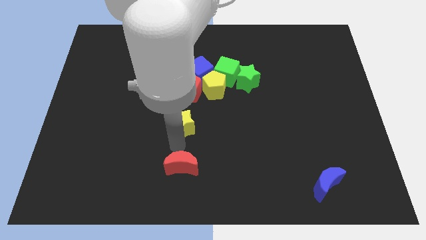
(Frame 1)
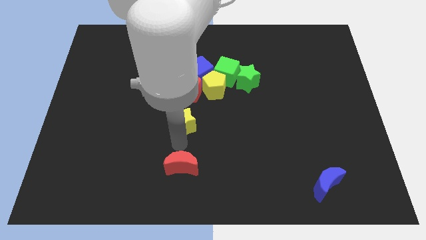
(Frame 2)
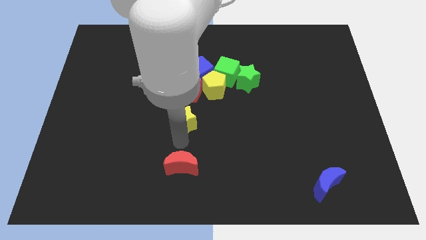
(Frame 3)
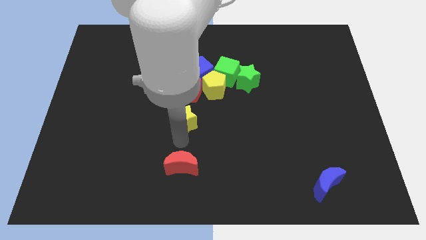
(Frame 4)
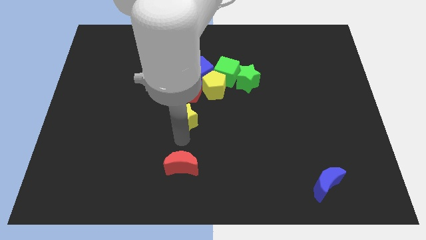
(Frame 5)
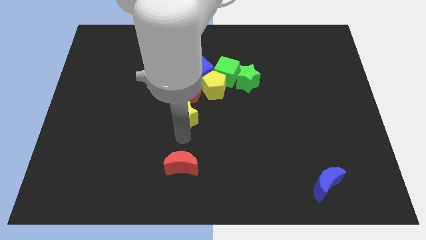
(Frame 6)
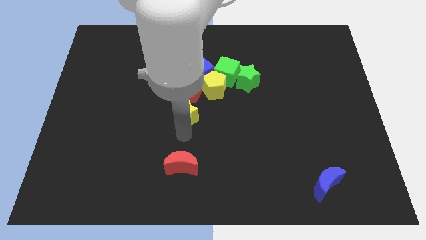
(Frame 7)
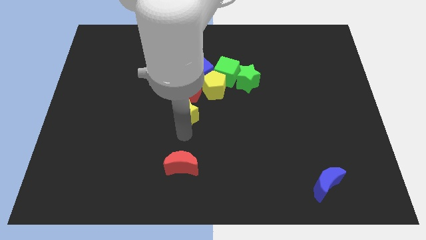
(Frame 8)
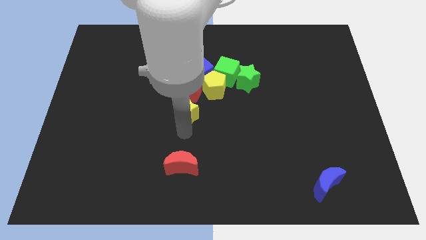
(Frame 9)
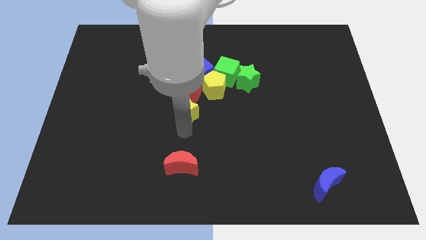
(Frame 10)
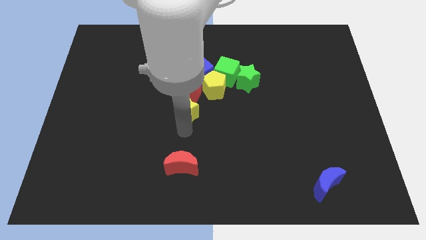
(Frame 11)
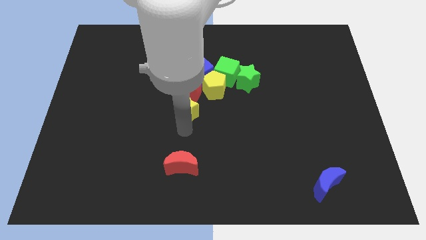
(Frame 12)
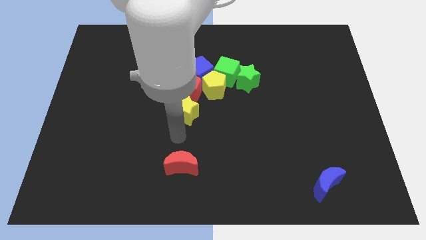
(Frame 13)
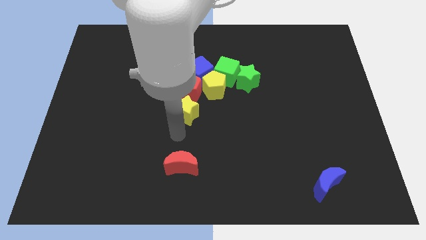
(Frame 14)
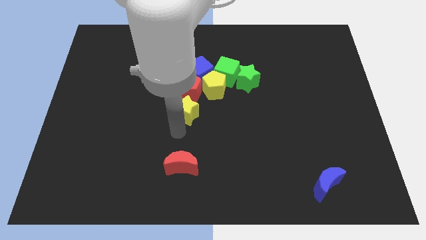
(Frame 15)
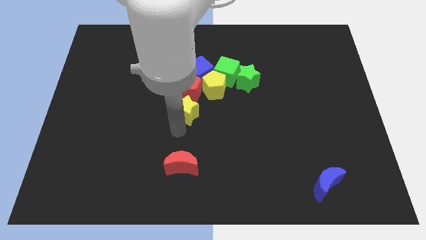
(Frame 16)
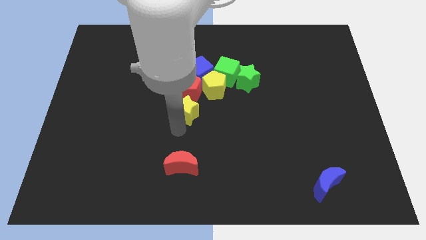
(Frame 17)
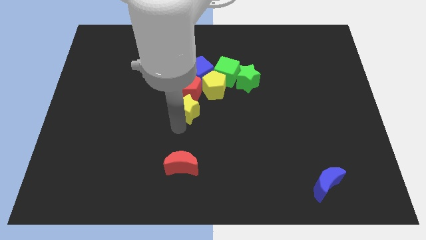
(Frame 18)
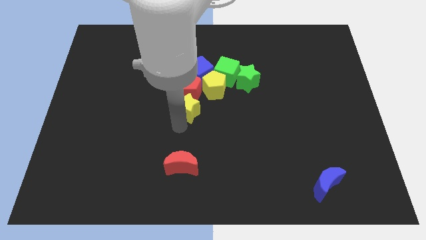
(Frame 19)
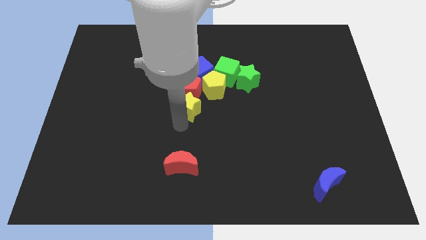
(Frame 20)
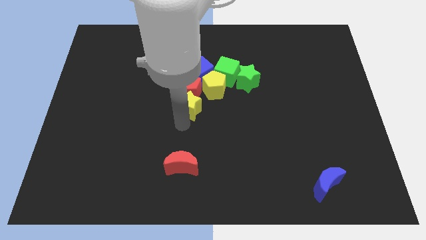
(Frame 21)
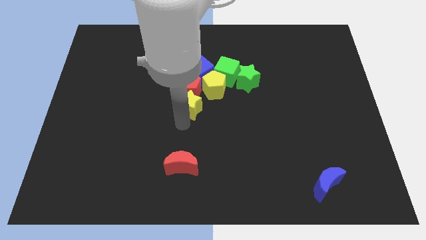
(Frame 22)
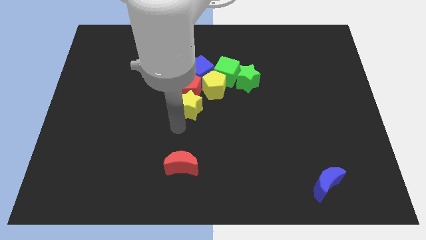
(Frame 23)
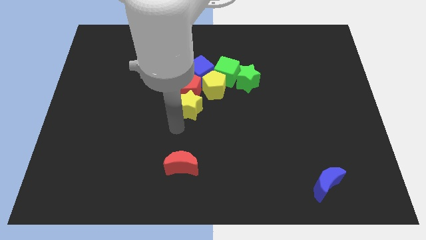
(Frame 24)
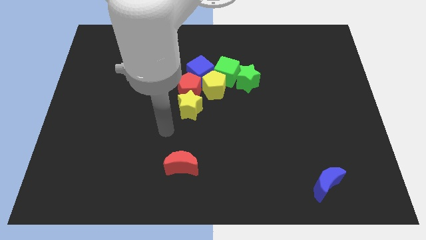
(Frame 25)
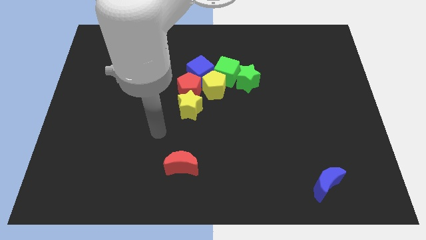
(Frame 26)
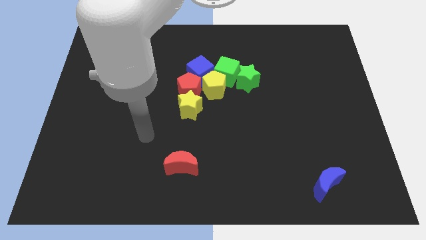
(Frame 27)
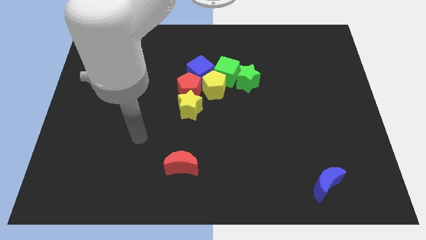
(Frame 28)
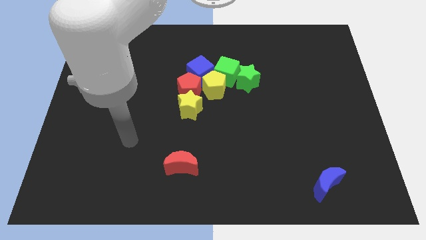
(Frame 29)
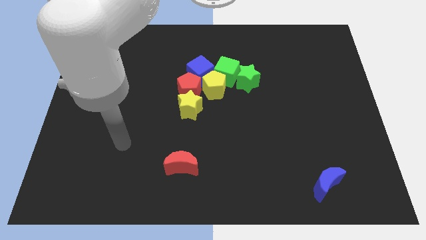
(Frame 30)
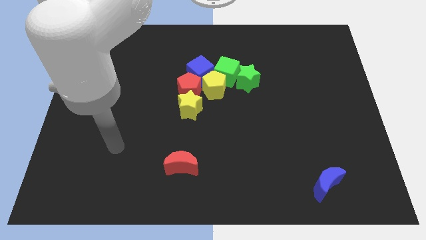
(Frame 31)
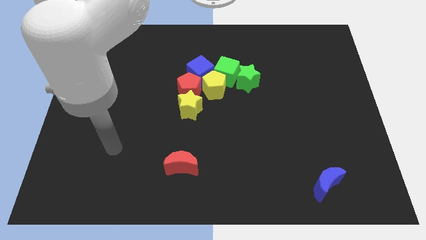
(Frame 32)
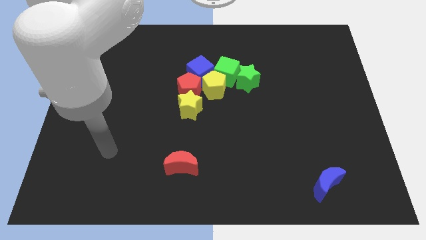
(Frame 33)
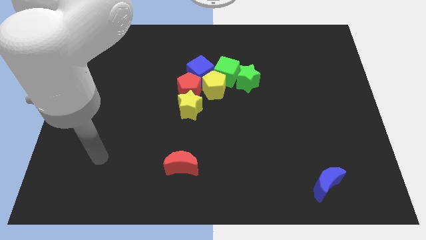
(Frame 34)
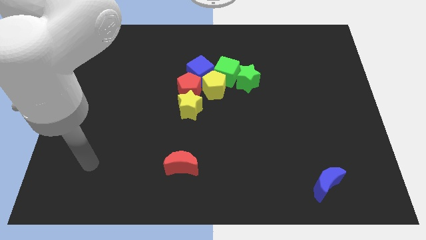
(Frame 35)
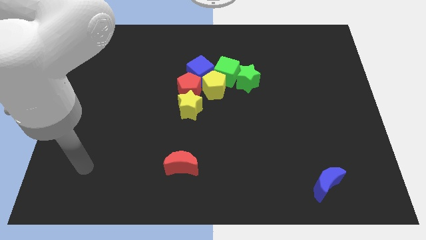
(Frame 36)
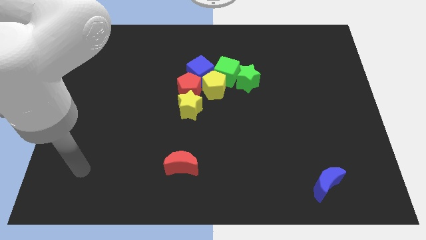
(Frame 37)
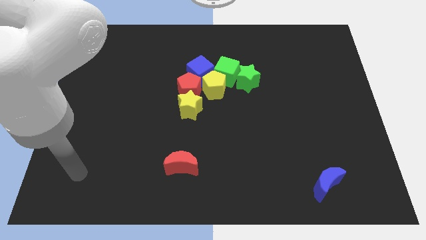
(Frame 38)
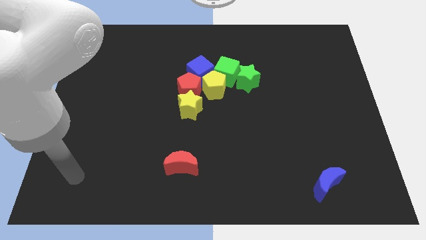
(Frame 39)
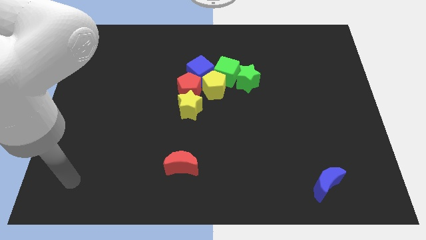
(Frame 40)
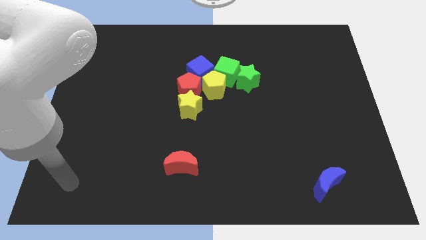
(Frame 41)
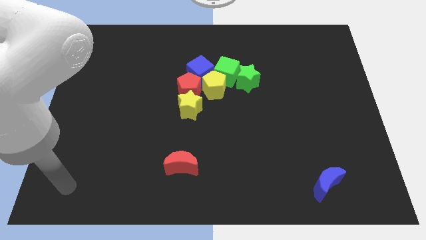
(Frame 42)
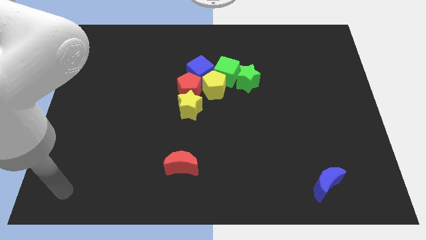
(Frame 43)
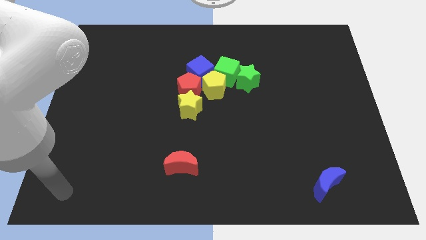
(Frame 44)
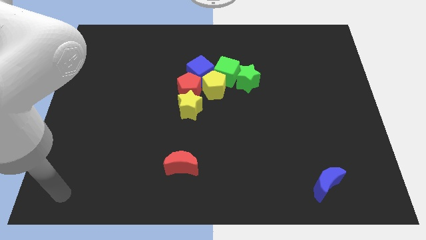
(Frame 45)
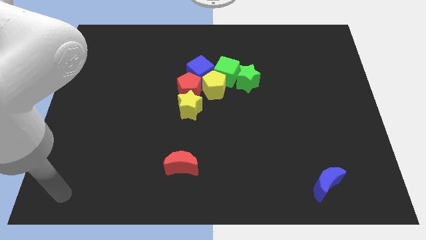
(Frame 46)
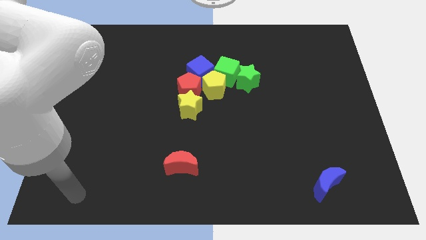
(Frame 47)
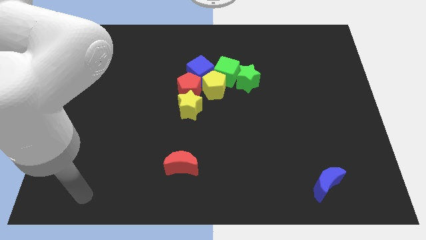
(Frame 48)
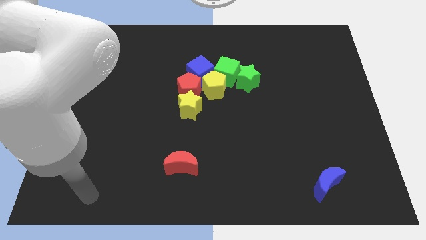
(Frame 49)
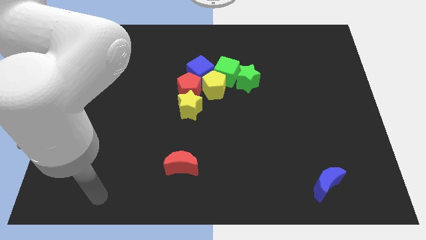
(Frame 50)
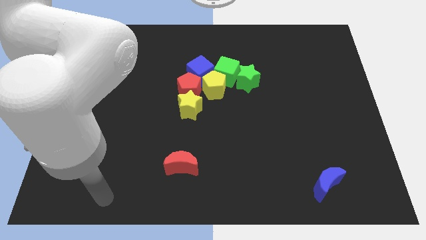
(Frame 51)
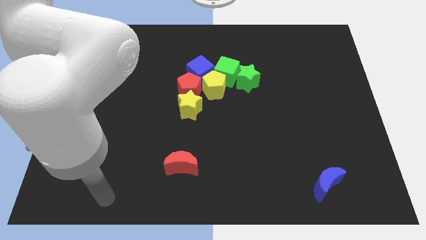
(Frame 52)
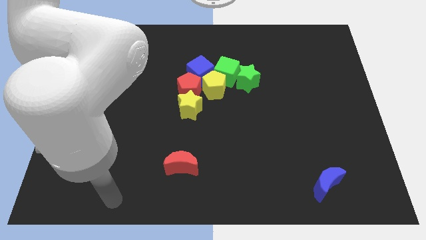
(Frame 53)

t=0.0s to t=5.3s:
move the yellow star to the group of blocks

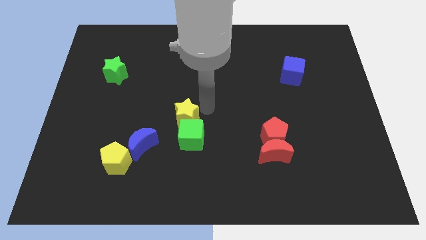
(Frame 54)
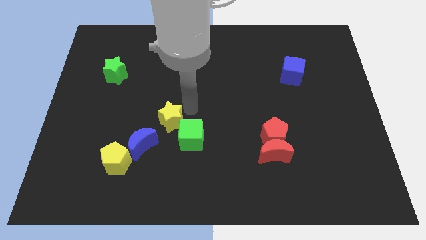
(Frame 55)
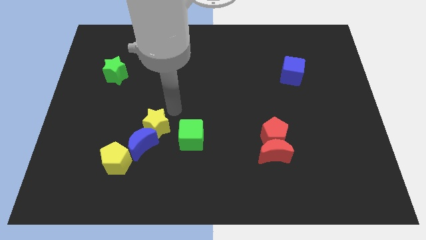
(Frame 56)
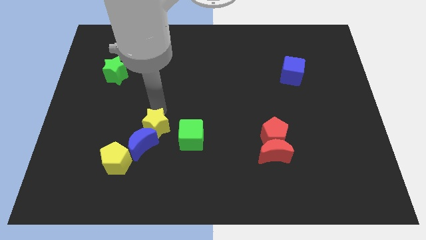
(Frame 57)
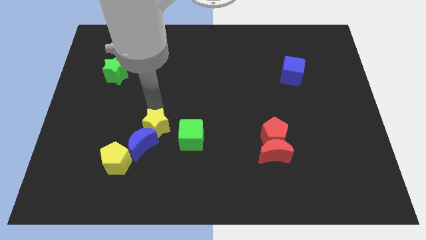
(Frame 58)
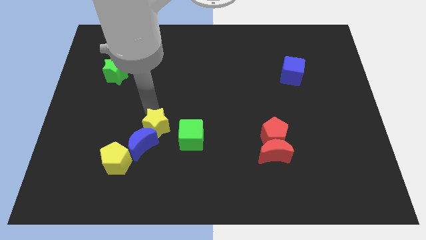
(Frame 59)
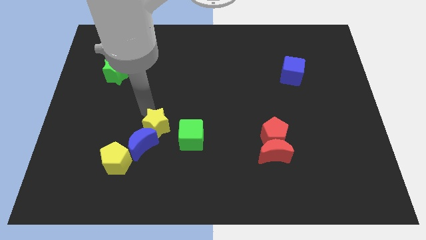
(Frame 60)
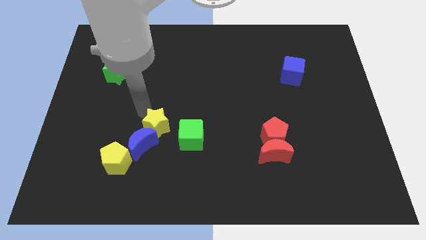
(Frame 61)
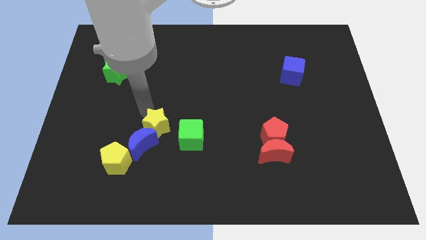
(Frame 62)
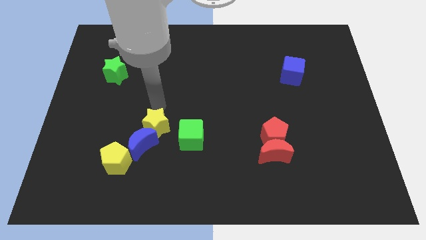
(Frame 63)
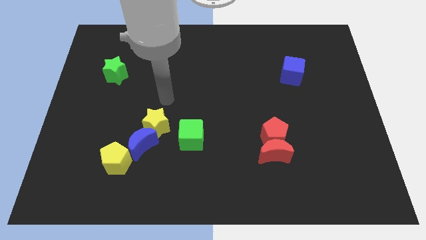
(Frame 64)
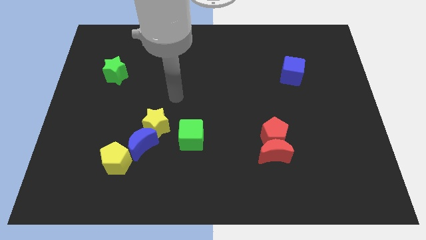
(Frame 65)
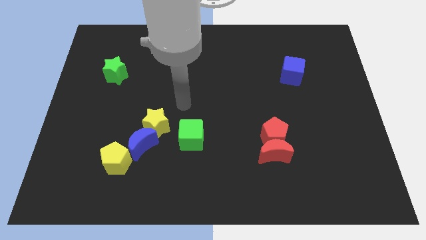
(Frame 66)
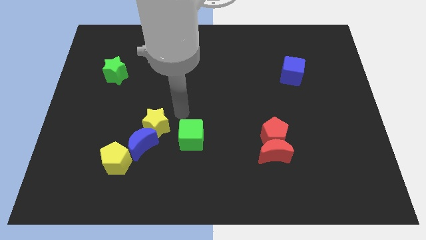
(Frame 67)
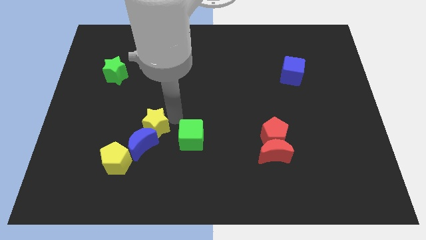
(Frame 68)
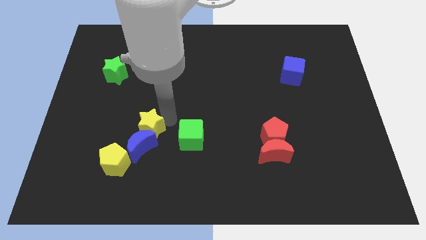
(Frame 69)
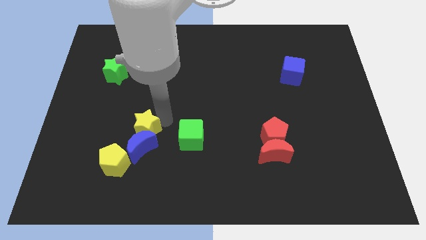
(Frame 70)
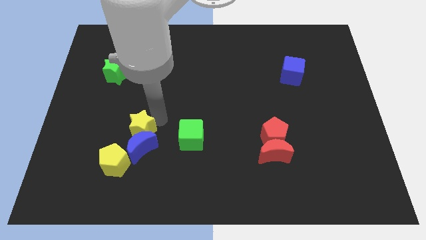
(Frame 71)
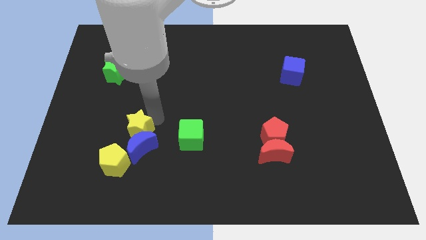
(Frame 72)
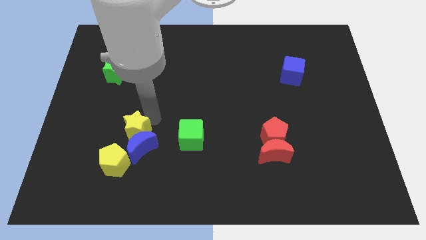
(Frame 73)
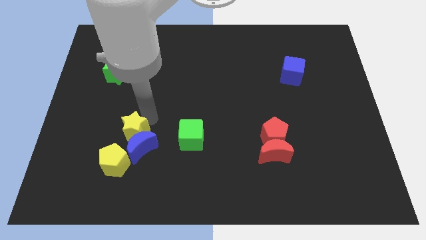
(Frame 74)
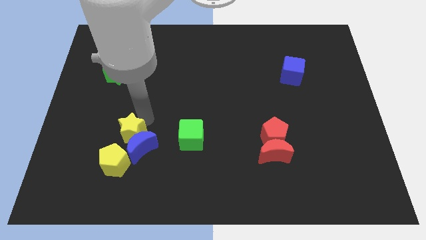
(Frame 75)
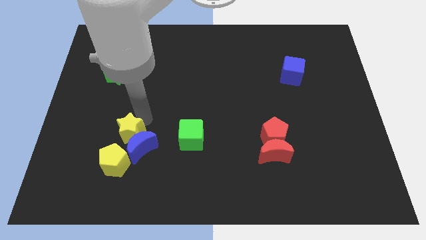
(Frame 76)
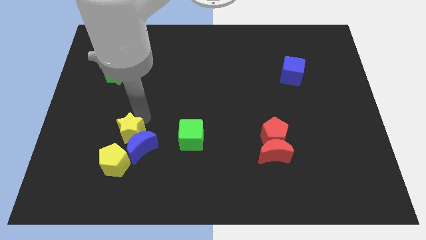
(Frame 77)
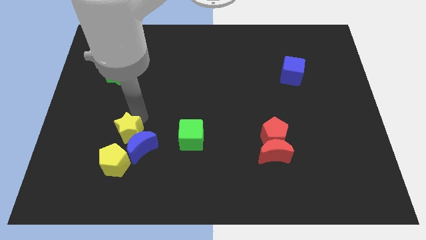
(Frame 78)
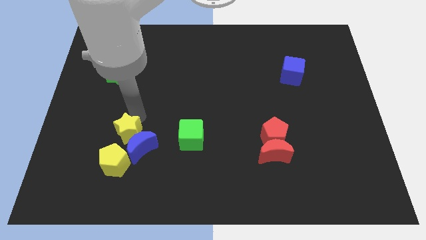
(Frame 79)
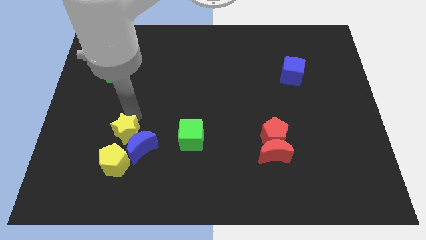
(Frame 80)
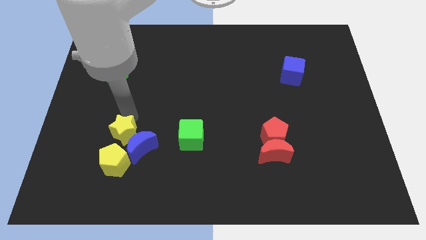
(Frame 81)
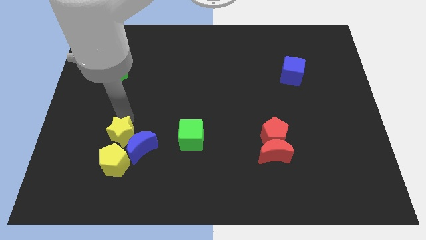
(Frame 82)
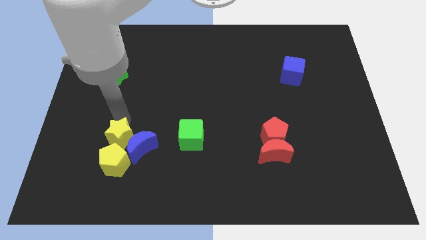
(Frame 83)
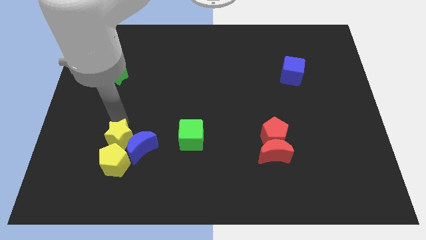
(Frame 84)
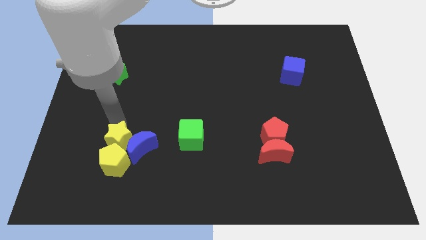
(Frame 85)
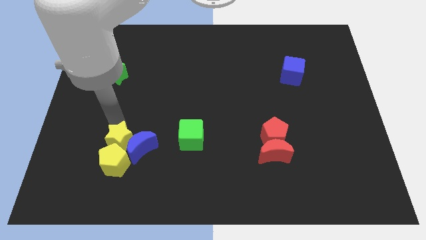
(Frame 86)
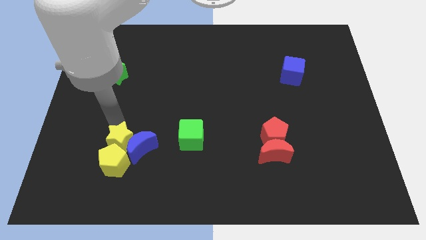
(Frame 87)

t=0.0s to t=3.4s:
push the yellow star towards the left to the blue crescent

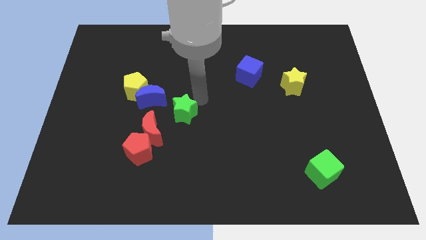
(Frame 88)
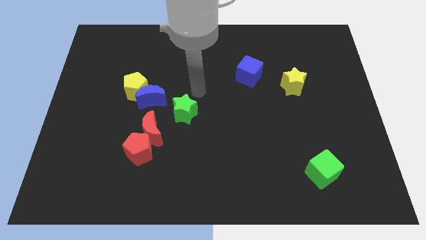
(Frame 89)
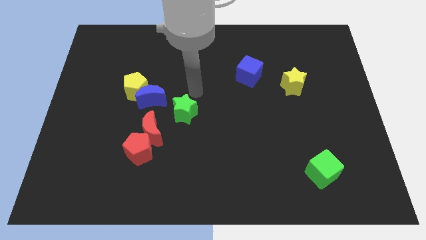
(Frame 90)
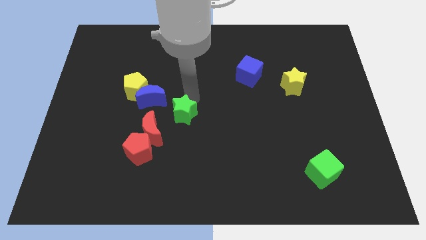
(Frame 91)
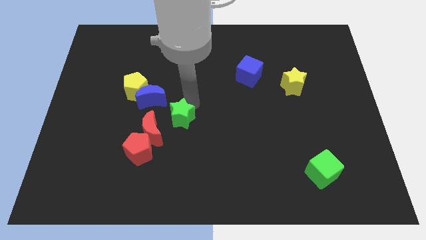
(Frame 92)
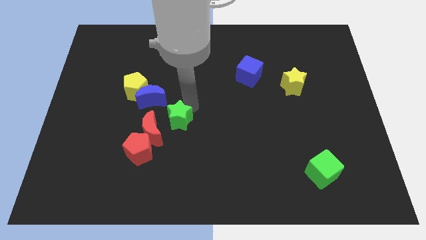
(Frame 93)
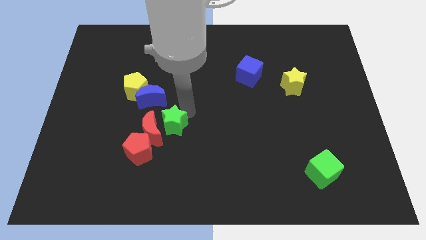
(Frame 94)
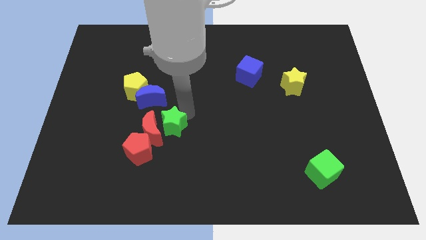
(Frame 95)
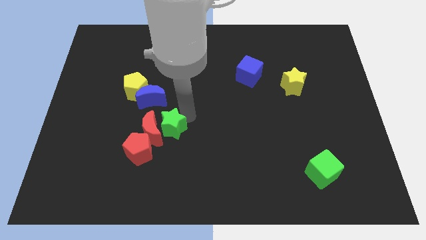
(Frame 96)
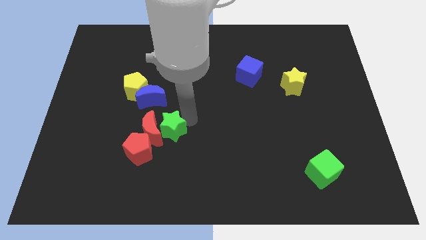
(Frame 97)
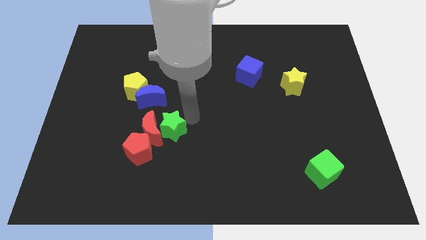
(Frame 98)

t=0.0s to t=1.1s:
move the green star to the right of the red crescent
